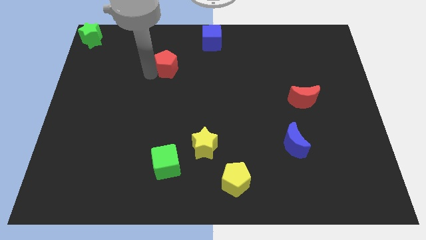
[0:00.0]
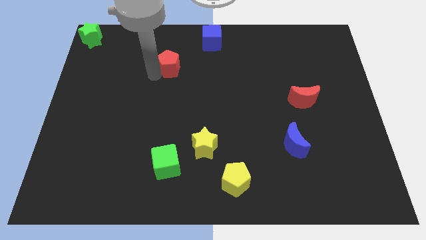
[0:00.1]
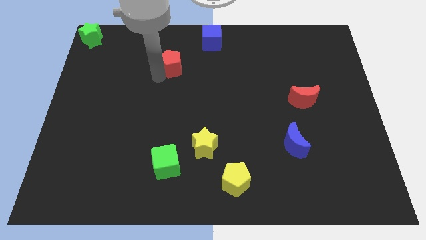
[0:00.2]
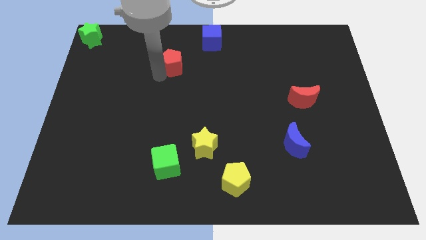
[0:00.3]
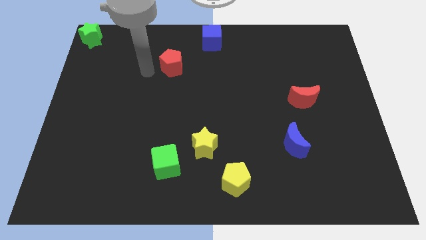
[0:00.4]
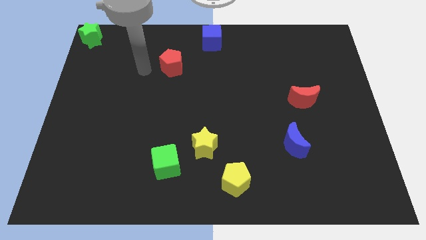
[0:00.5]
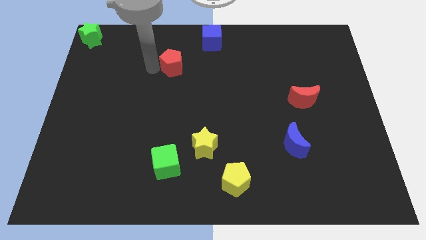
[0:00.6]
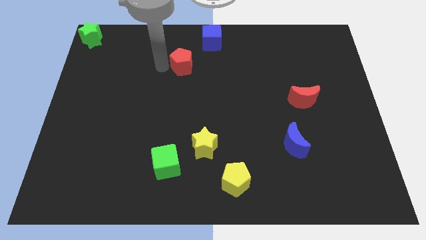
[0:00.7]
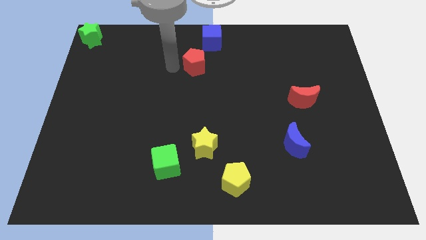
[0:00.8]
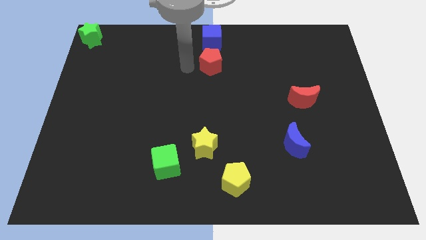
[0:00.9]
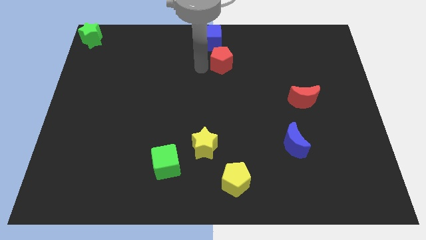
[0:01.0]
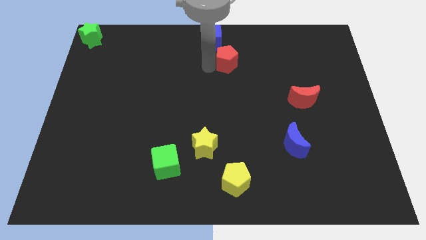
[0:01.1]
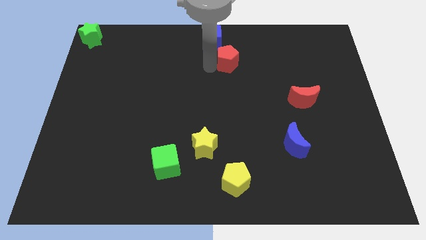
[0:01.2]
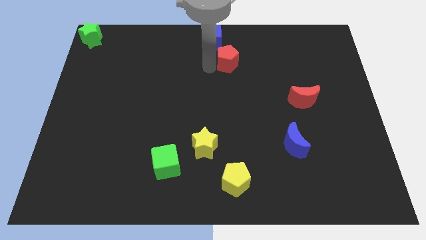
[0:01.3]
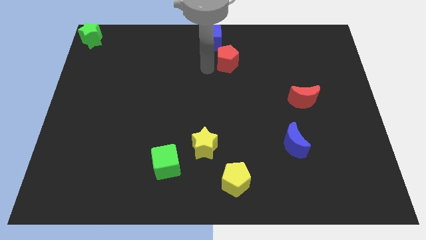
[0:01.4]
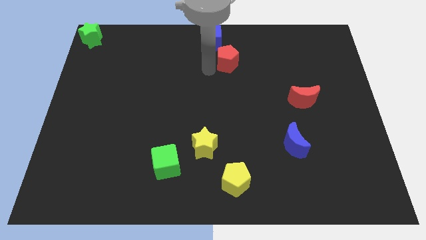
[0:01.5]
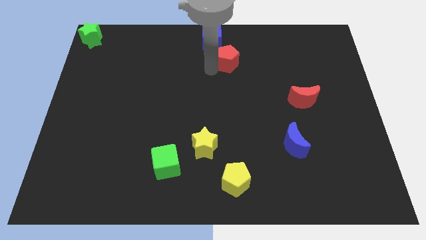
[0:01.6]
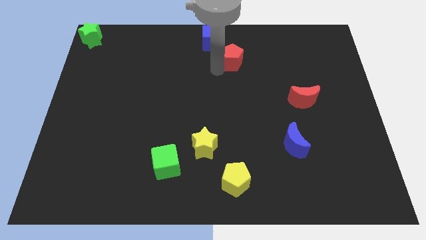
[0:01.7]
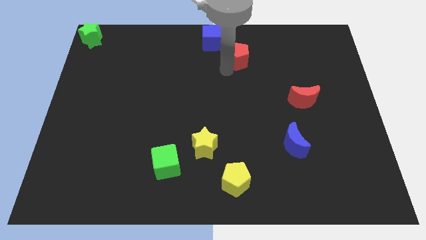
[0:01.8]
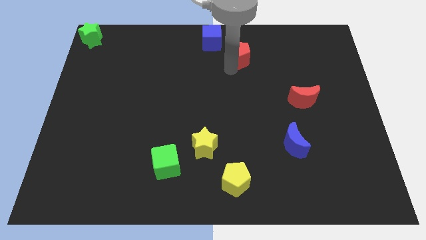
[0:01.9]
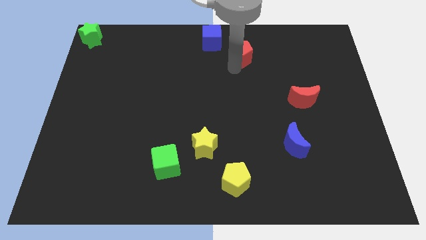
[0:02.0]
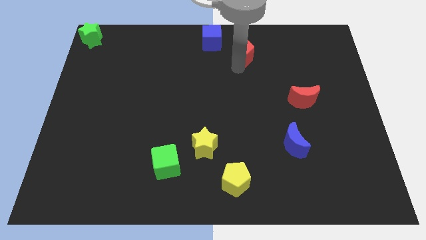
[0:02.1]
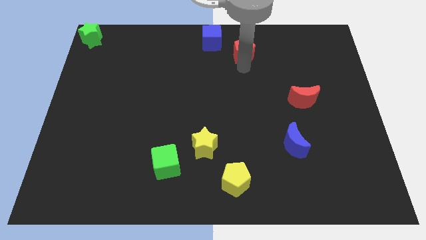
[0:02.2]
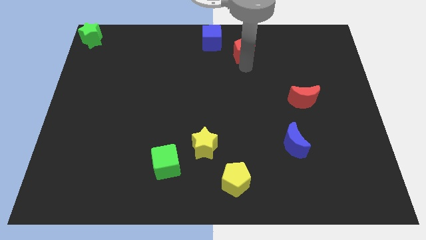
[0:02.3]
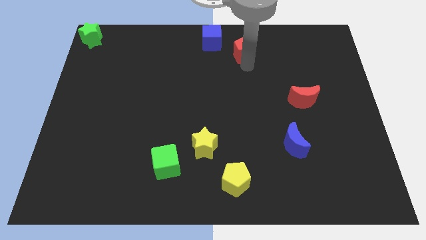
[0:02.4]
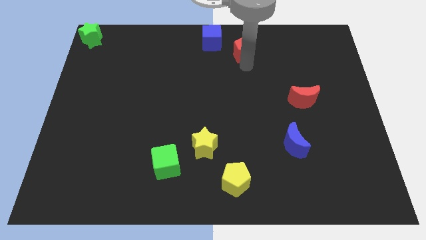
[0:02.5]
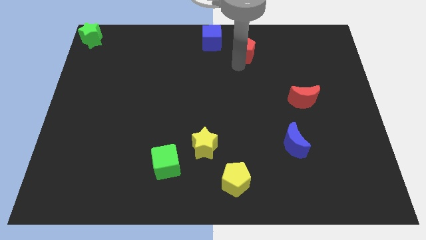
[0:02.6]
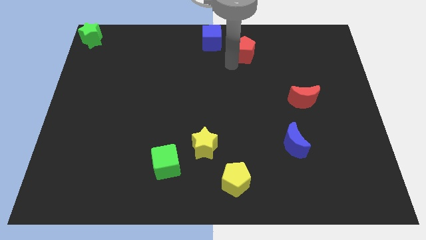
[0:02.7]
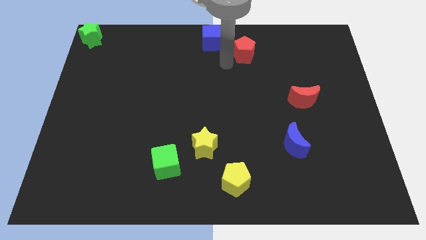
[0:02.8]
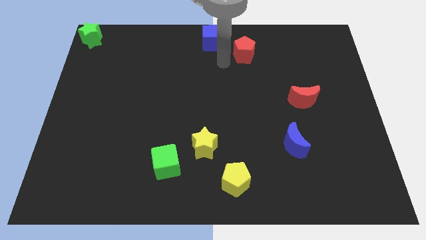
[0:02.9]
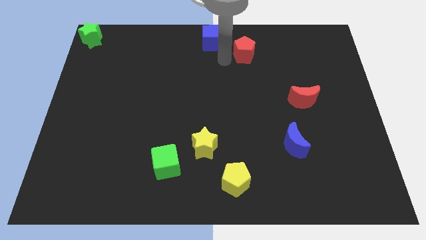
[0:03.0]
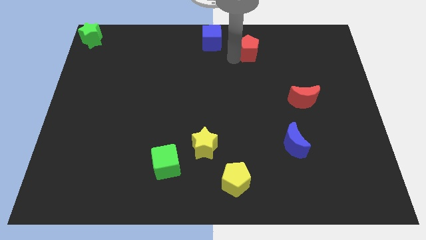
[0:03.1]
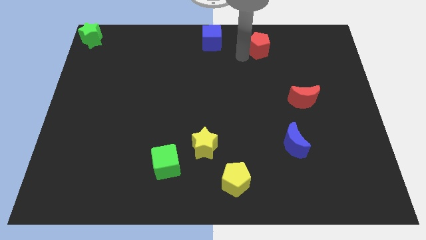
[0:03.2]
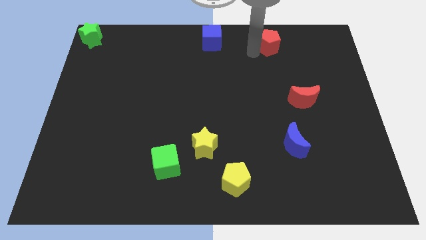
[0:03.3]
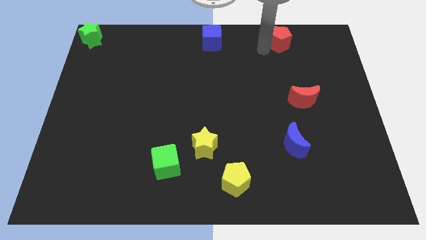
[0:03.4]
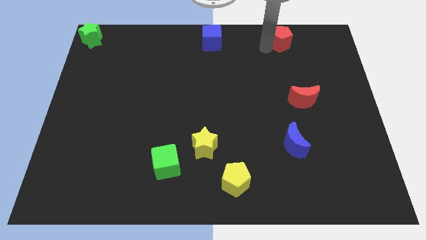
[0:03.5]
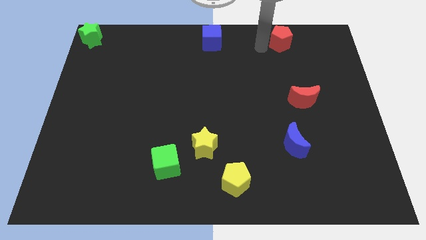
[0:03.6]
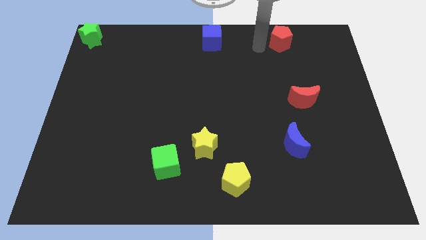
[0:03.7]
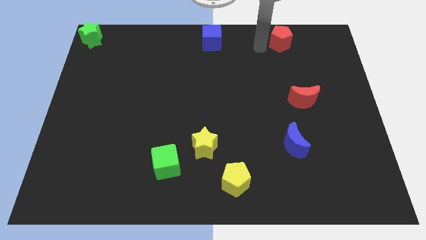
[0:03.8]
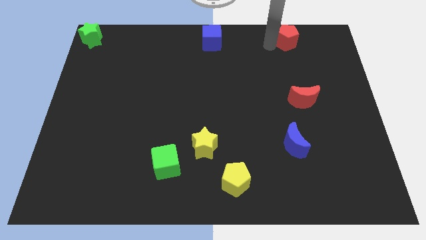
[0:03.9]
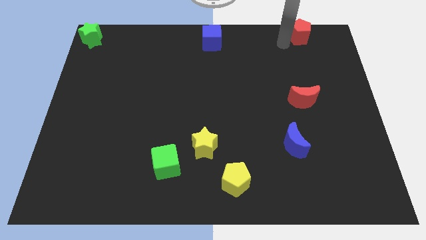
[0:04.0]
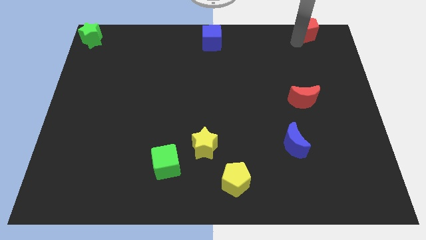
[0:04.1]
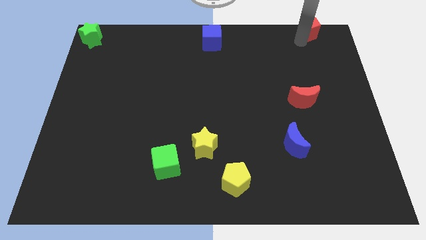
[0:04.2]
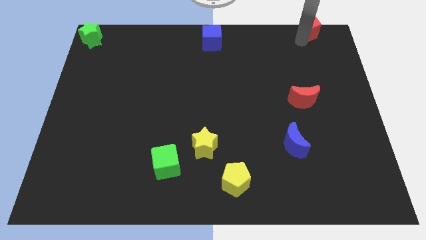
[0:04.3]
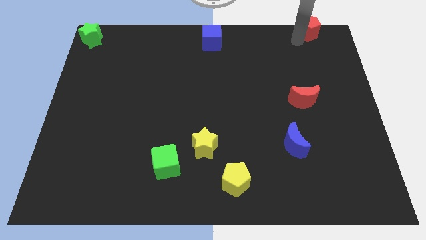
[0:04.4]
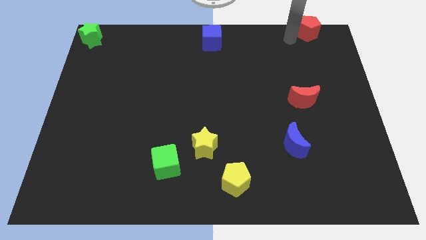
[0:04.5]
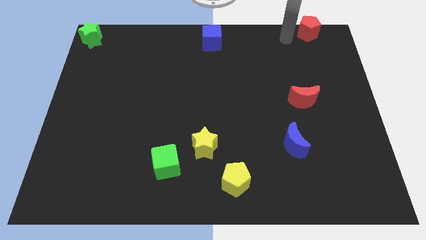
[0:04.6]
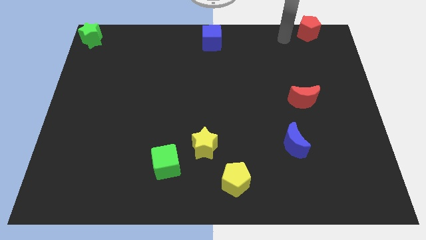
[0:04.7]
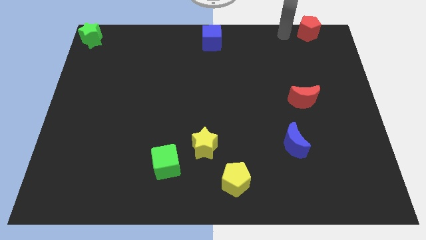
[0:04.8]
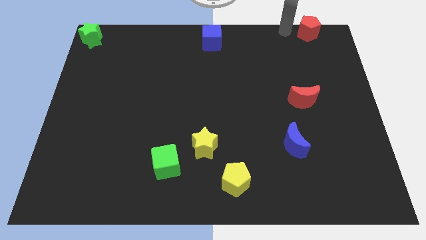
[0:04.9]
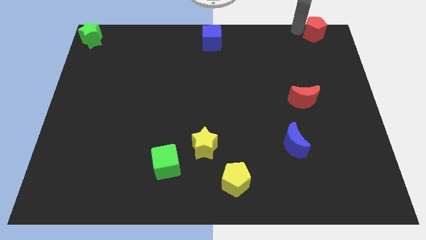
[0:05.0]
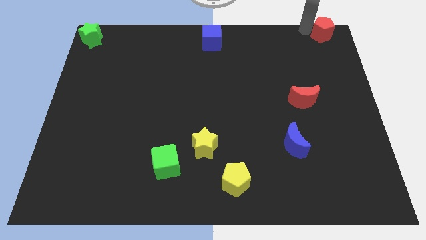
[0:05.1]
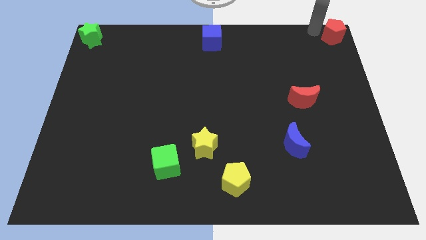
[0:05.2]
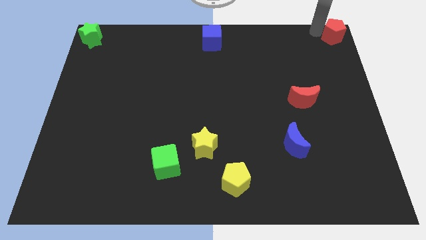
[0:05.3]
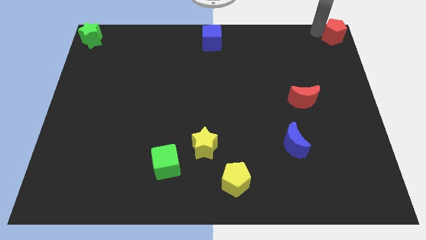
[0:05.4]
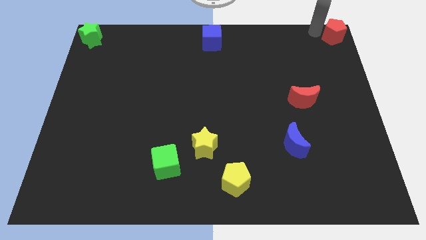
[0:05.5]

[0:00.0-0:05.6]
move the red pentagon to the top right corner of board

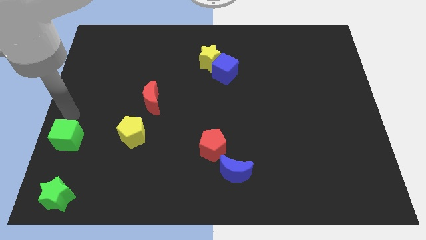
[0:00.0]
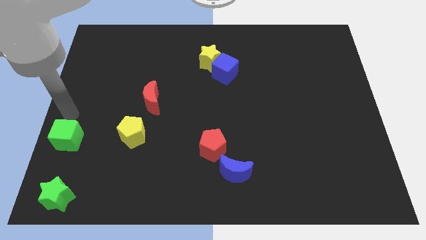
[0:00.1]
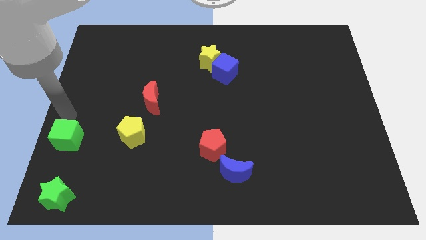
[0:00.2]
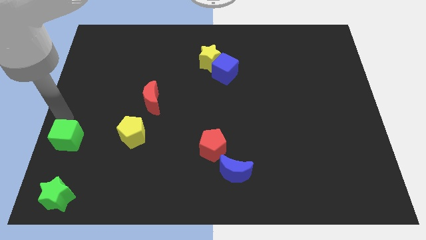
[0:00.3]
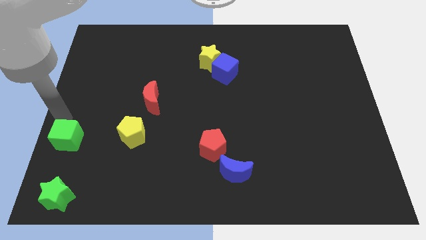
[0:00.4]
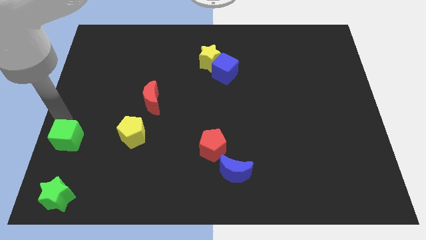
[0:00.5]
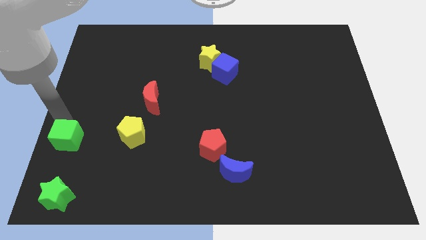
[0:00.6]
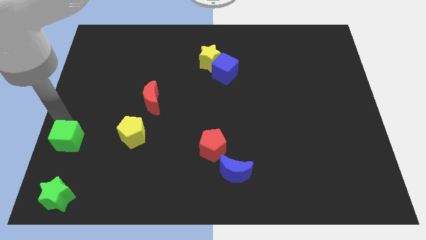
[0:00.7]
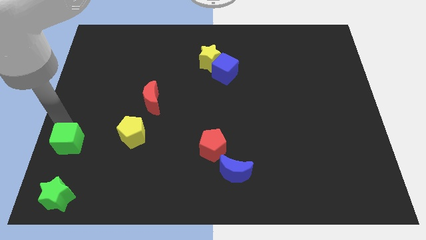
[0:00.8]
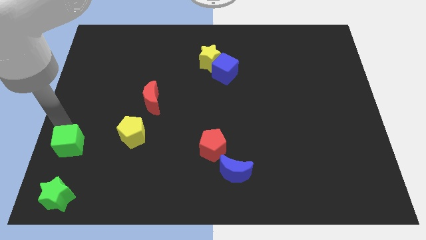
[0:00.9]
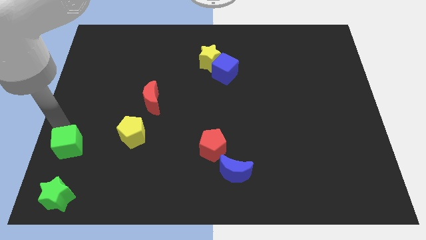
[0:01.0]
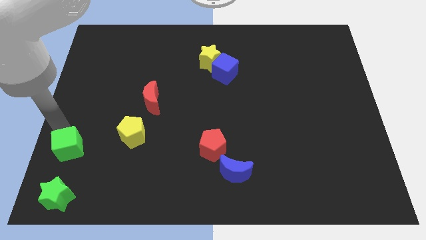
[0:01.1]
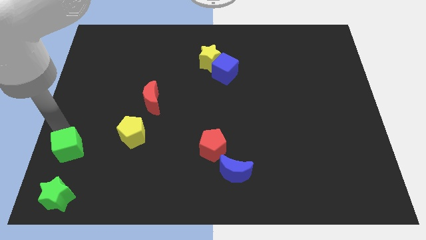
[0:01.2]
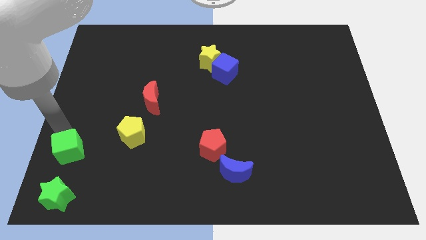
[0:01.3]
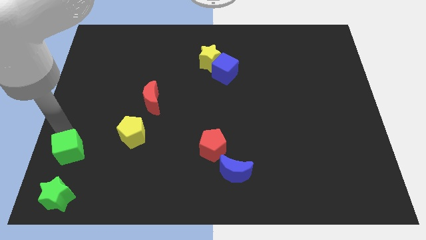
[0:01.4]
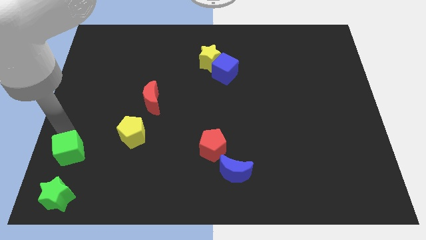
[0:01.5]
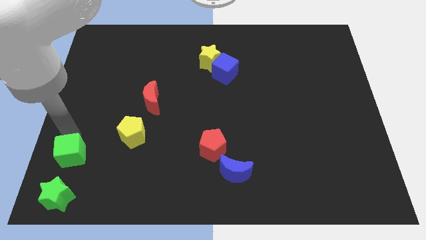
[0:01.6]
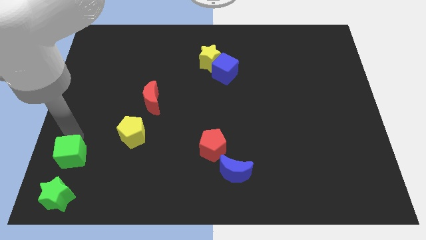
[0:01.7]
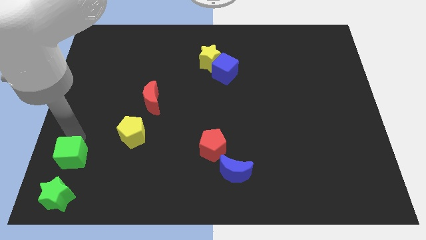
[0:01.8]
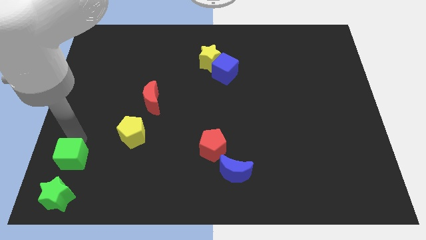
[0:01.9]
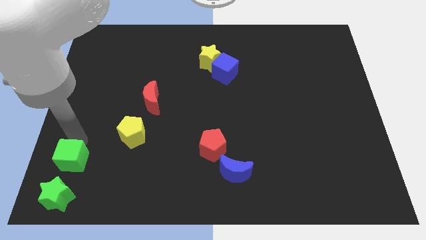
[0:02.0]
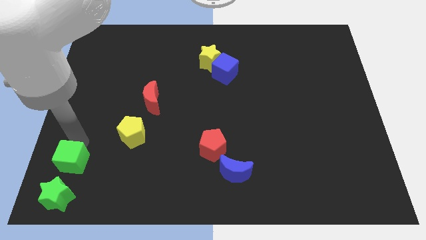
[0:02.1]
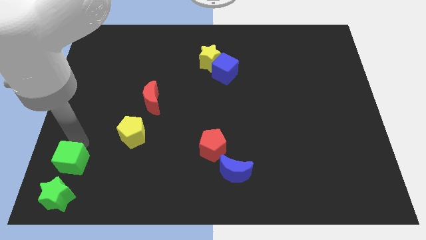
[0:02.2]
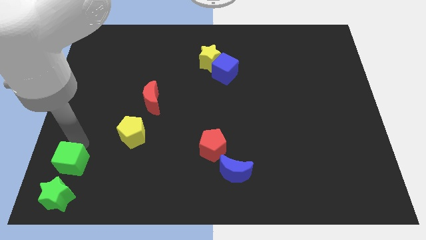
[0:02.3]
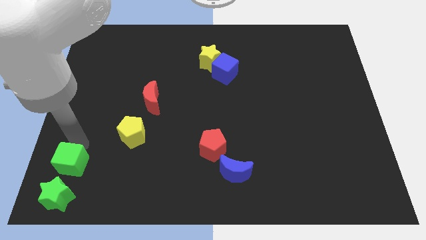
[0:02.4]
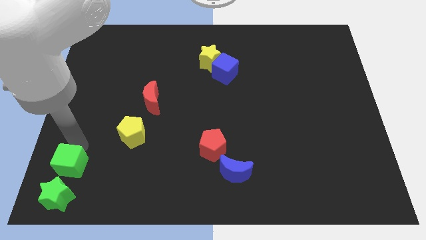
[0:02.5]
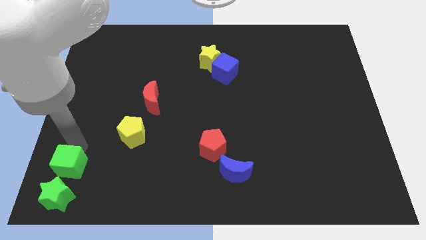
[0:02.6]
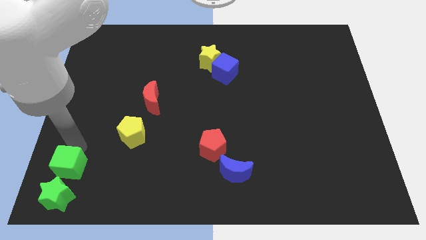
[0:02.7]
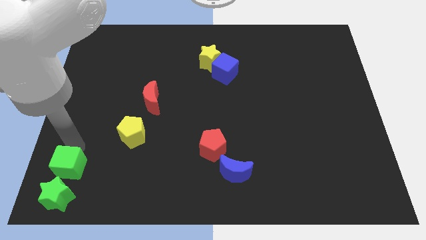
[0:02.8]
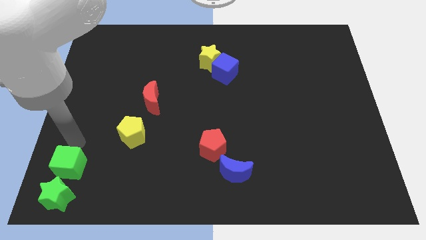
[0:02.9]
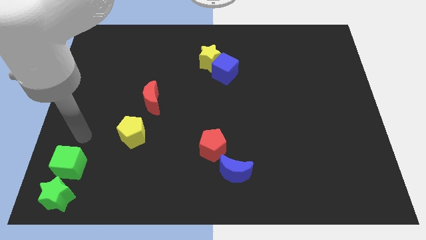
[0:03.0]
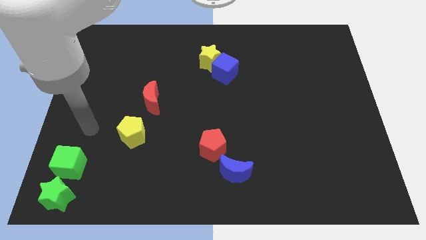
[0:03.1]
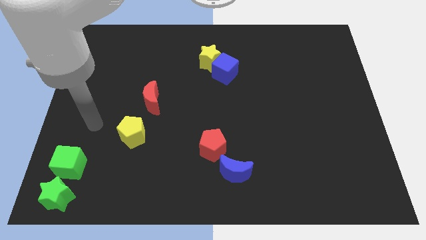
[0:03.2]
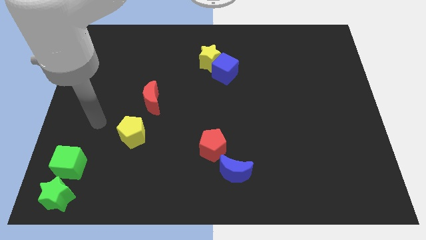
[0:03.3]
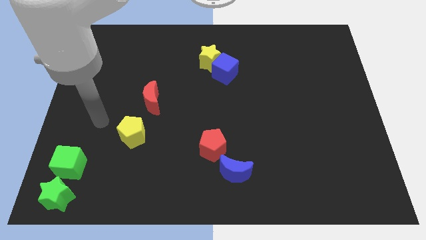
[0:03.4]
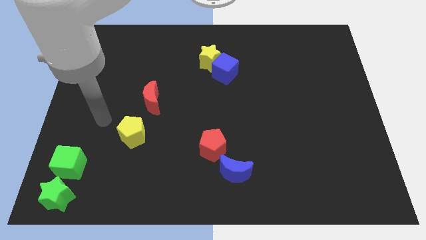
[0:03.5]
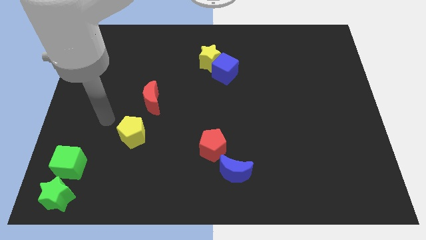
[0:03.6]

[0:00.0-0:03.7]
push the green cube to the top of green star
